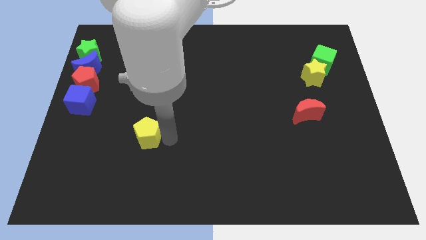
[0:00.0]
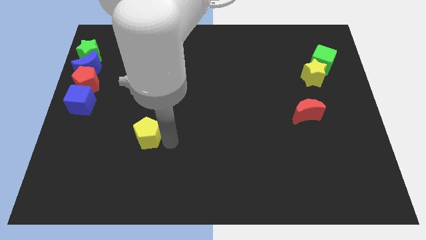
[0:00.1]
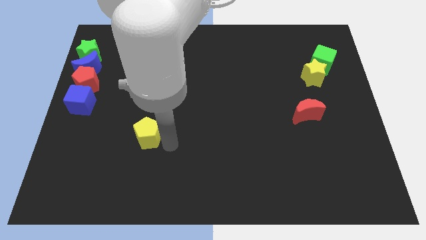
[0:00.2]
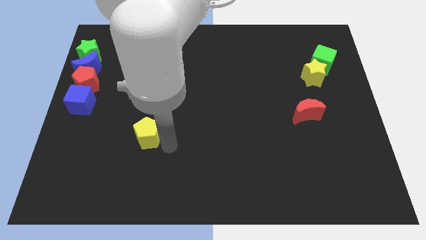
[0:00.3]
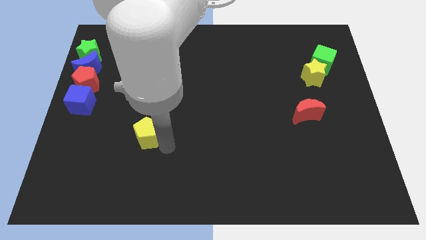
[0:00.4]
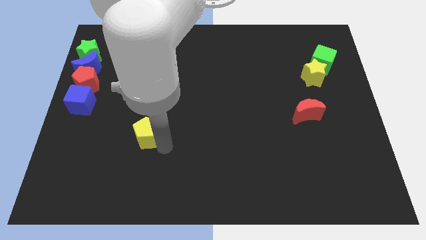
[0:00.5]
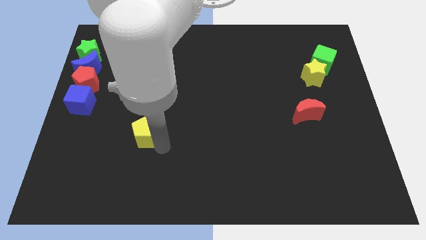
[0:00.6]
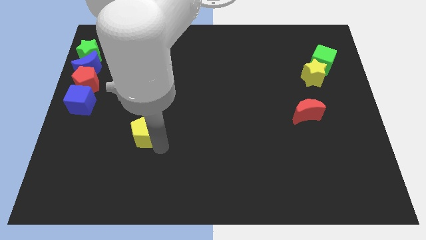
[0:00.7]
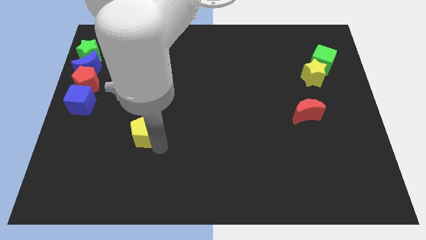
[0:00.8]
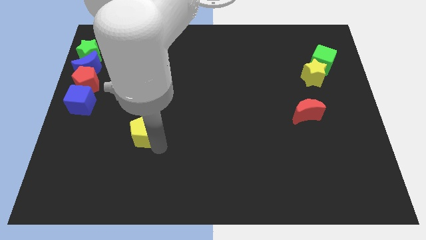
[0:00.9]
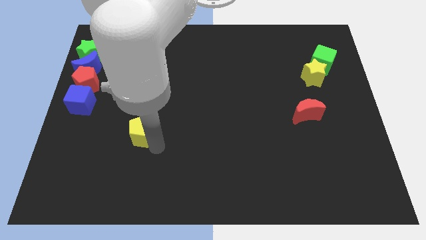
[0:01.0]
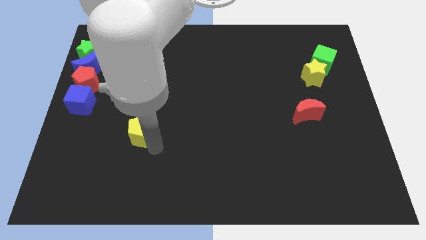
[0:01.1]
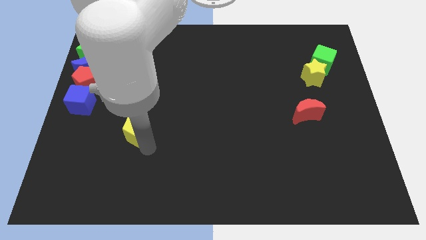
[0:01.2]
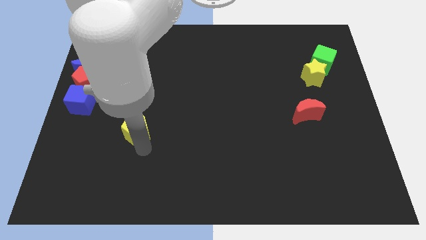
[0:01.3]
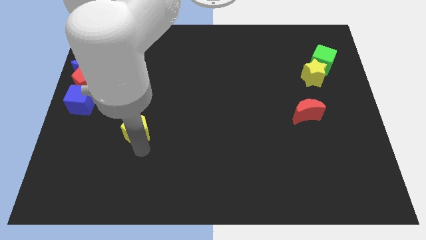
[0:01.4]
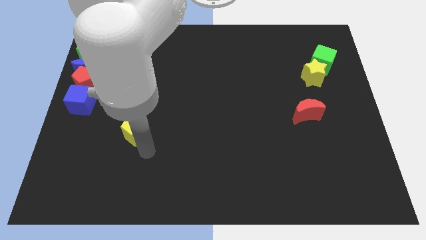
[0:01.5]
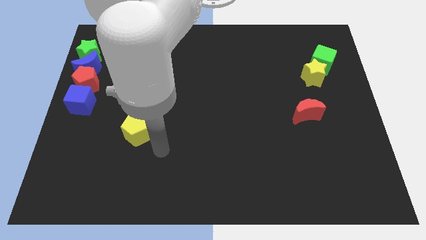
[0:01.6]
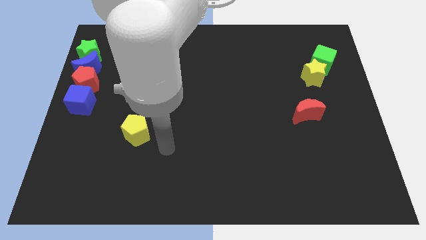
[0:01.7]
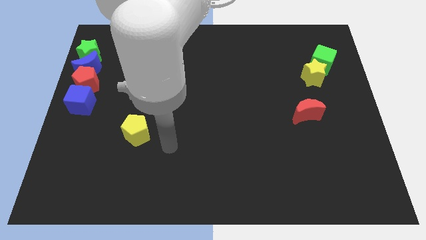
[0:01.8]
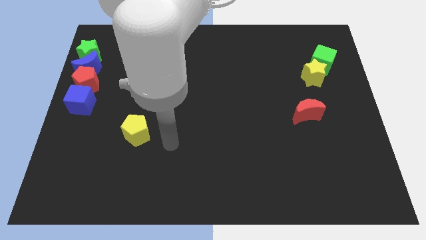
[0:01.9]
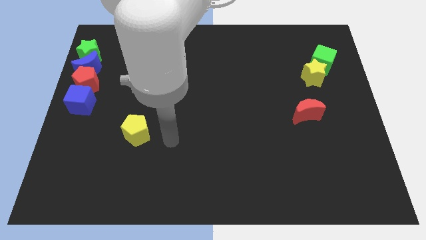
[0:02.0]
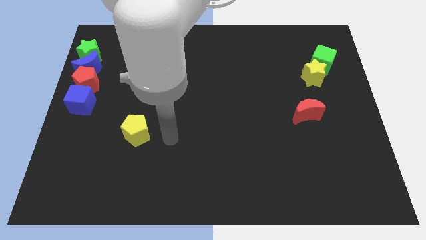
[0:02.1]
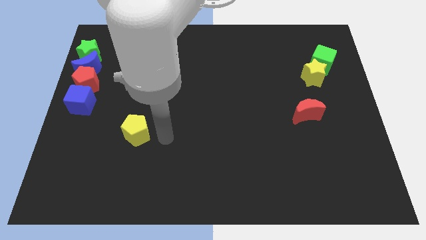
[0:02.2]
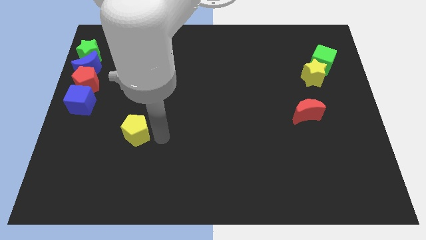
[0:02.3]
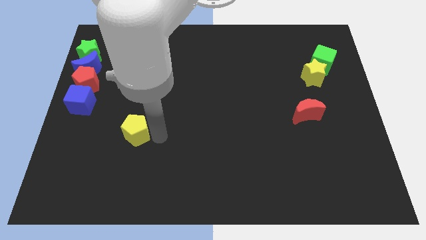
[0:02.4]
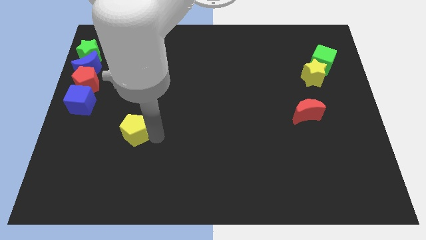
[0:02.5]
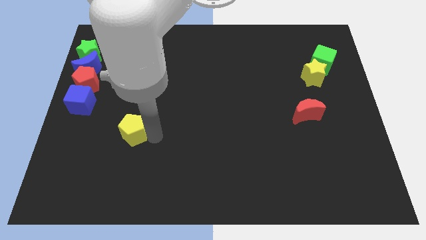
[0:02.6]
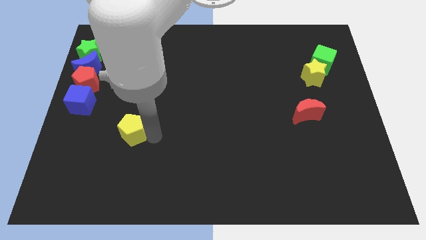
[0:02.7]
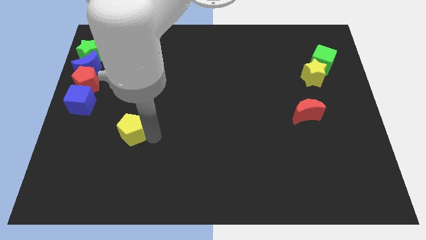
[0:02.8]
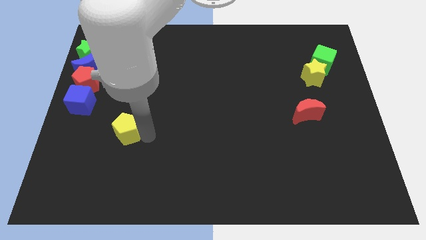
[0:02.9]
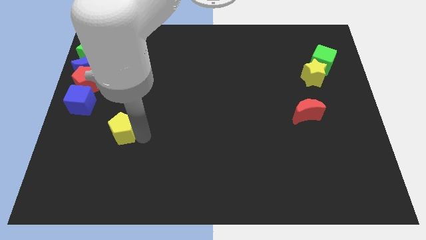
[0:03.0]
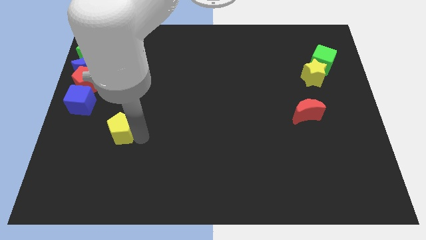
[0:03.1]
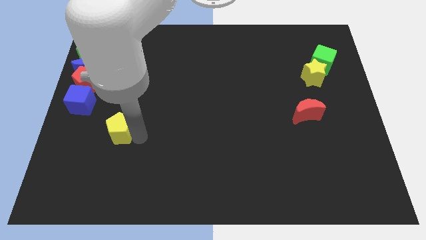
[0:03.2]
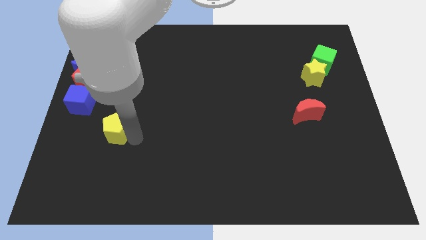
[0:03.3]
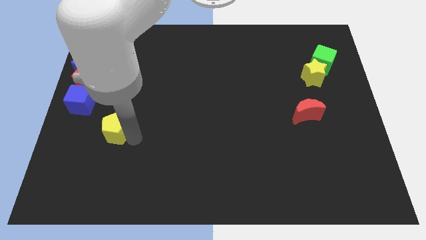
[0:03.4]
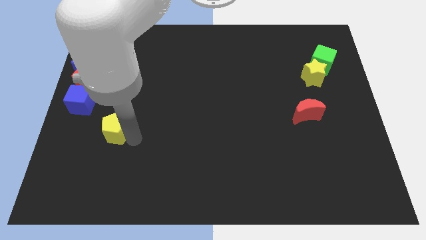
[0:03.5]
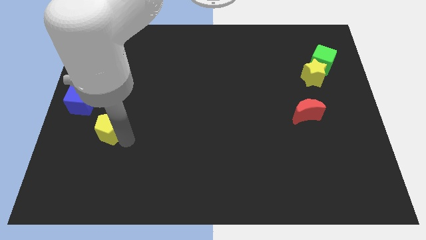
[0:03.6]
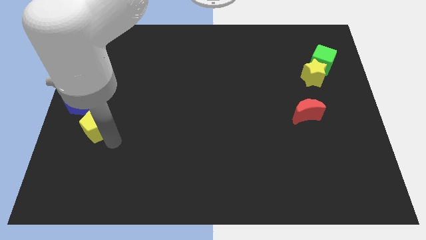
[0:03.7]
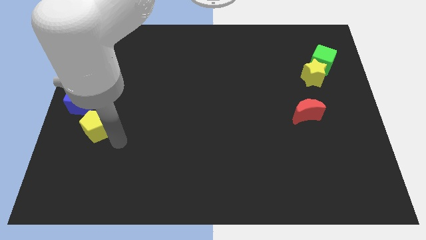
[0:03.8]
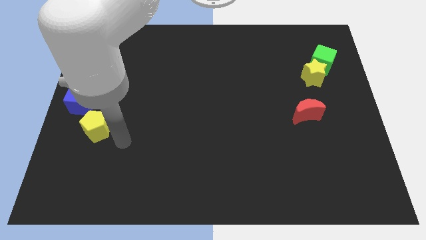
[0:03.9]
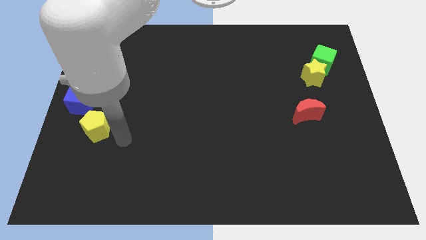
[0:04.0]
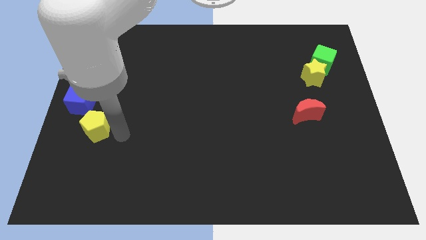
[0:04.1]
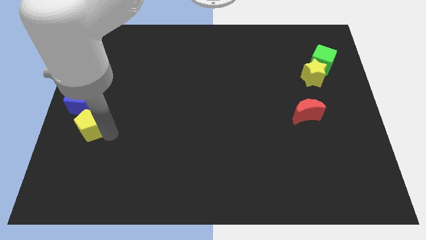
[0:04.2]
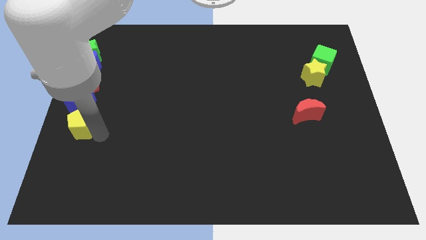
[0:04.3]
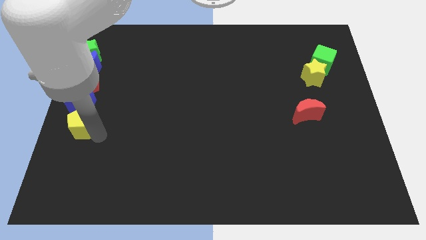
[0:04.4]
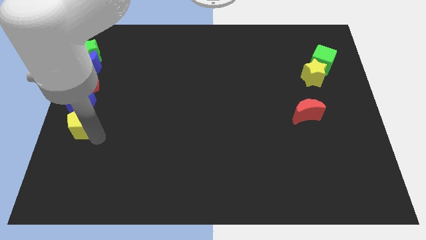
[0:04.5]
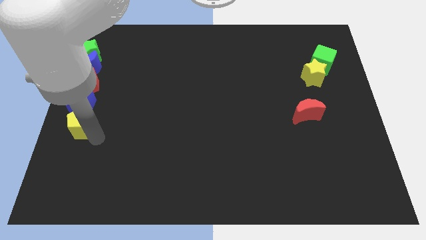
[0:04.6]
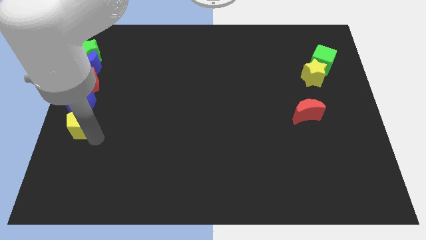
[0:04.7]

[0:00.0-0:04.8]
push the yellow pentagon to the bottom of the blue cube

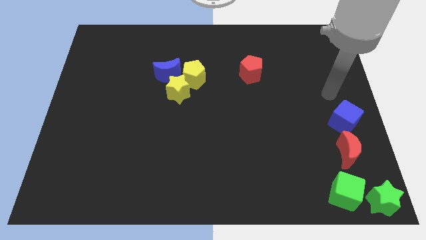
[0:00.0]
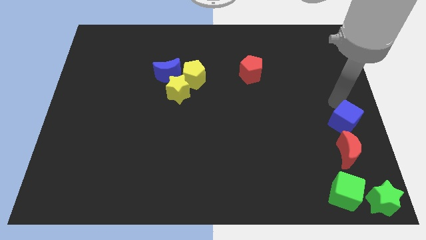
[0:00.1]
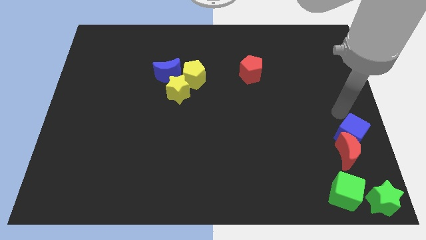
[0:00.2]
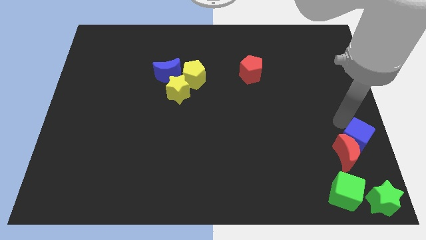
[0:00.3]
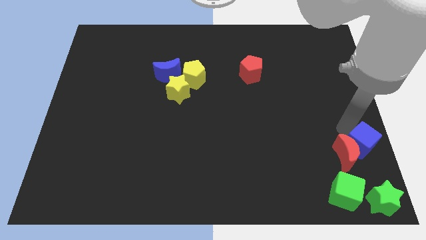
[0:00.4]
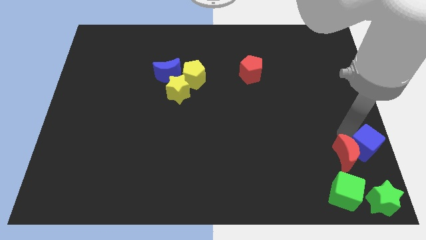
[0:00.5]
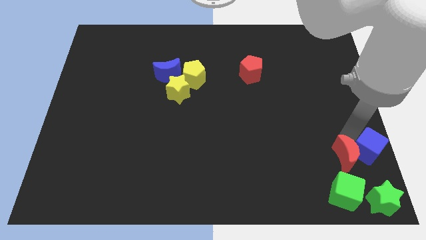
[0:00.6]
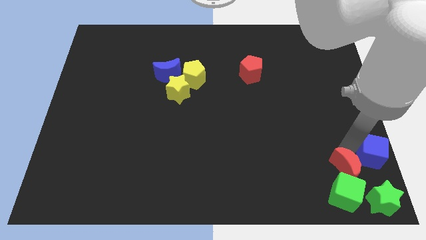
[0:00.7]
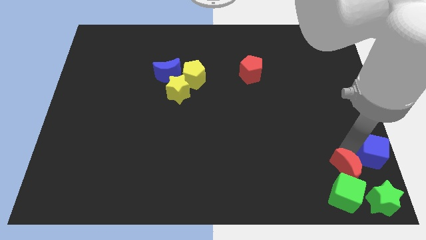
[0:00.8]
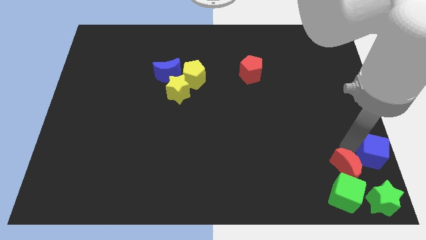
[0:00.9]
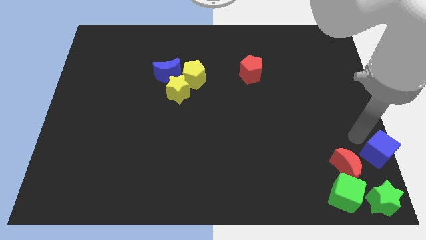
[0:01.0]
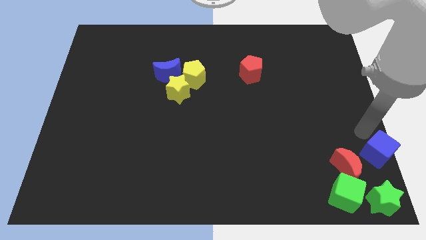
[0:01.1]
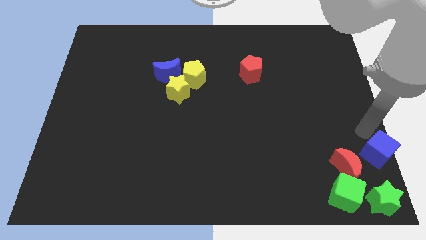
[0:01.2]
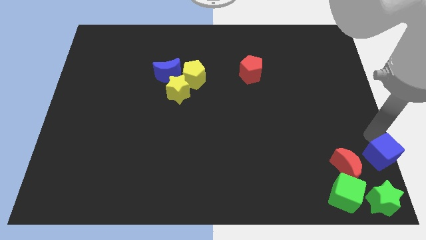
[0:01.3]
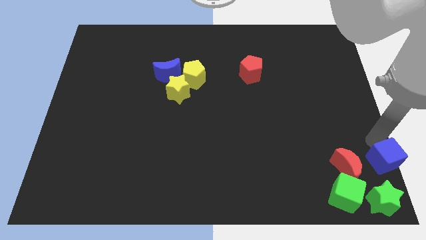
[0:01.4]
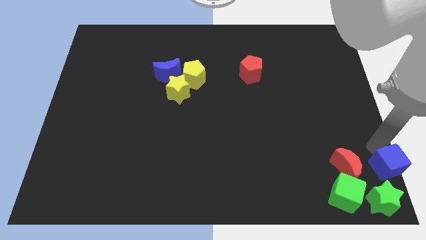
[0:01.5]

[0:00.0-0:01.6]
put the blue cube above the green star

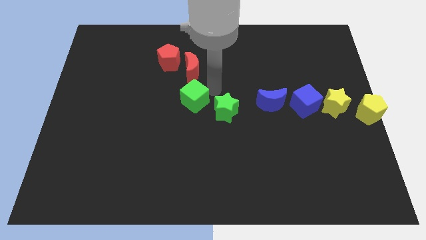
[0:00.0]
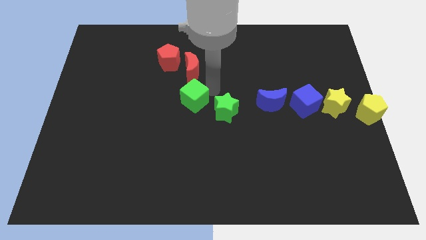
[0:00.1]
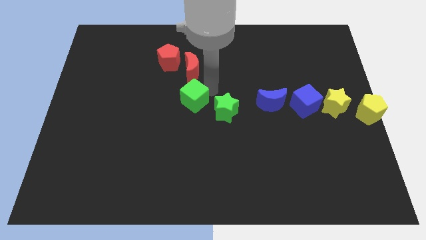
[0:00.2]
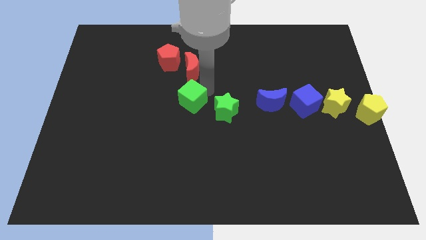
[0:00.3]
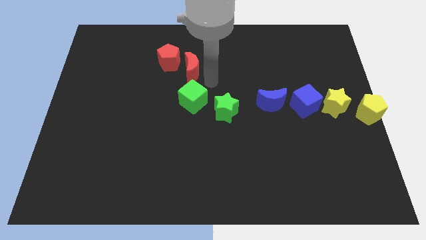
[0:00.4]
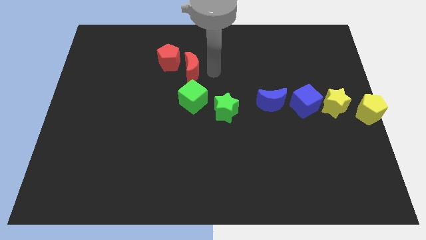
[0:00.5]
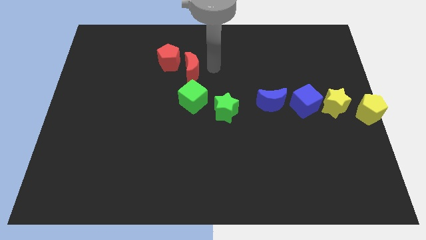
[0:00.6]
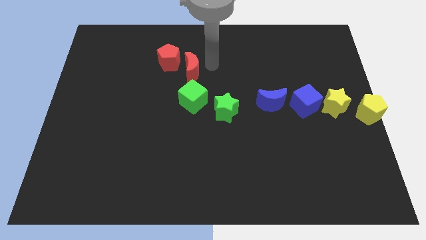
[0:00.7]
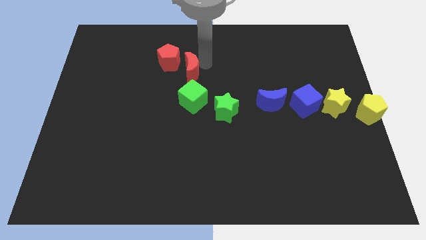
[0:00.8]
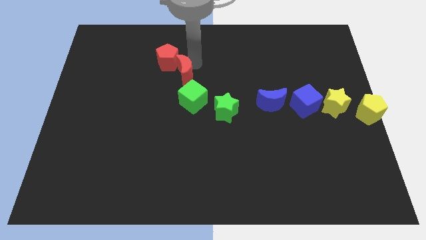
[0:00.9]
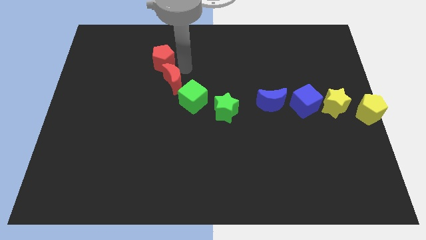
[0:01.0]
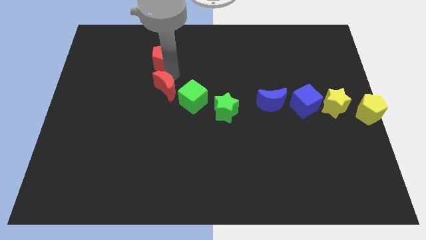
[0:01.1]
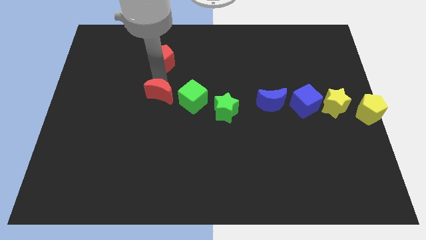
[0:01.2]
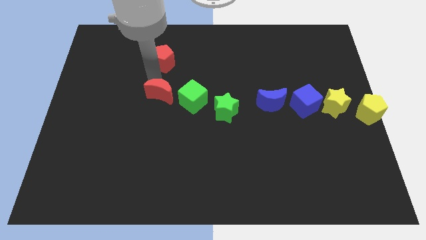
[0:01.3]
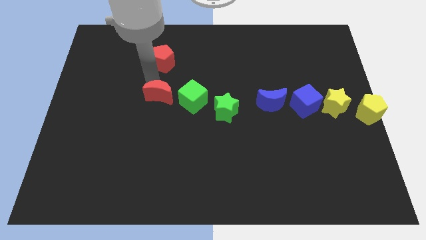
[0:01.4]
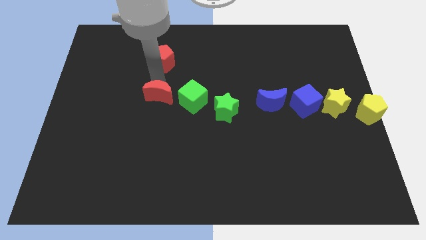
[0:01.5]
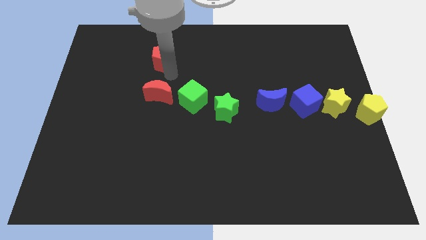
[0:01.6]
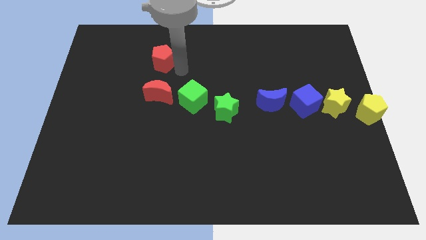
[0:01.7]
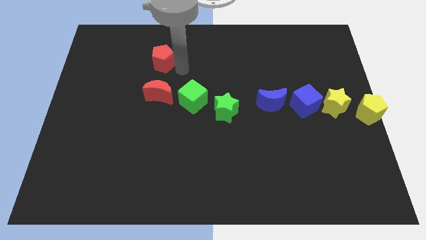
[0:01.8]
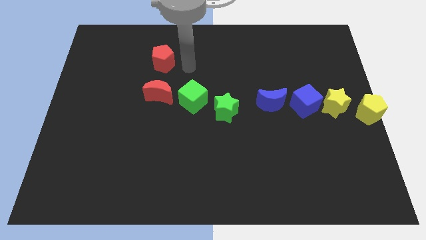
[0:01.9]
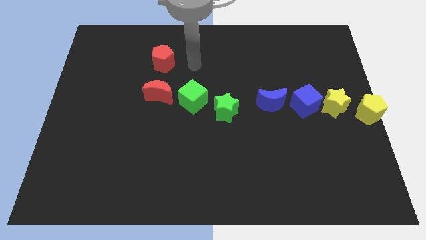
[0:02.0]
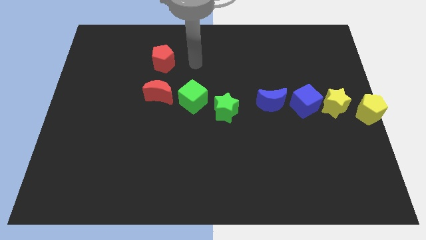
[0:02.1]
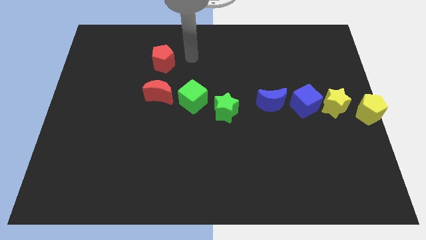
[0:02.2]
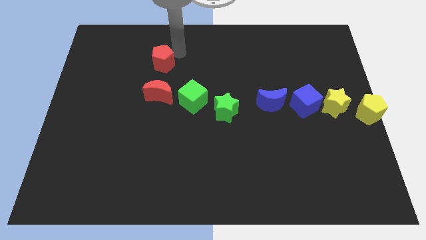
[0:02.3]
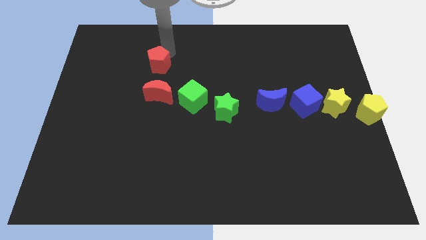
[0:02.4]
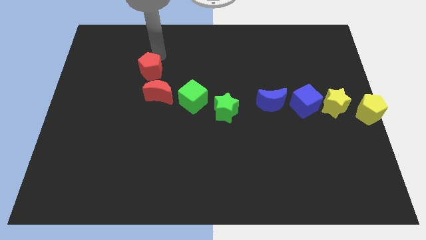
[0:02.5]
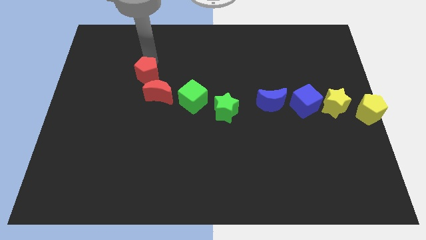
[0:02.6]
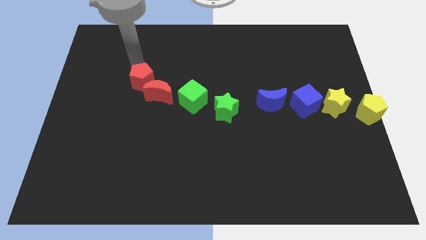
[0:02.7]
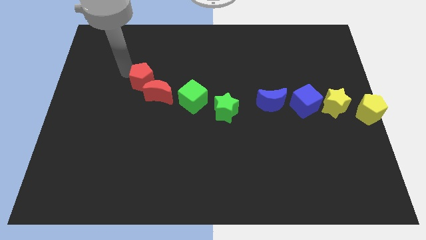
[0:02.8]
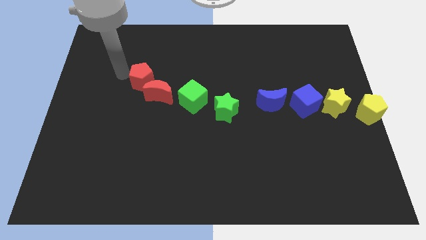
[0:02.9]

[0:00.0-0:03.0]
push the red moon to the left of the green cube
